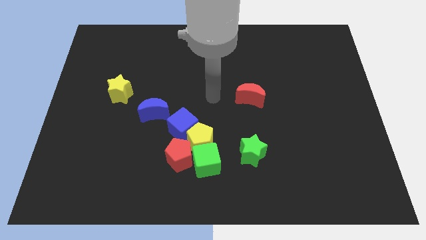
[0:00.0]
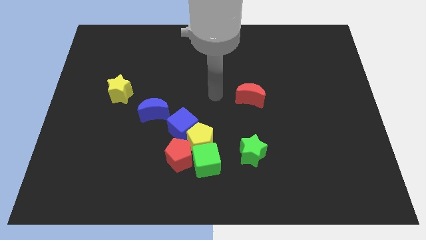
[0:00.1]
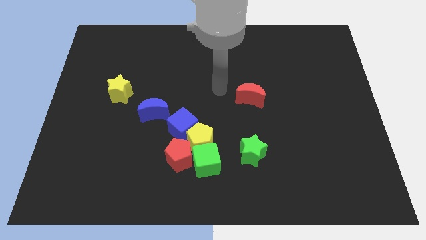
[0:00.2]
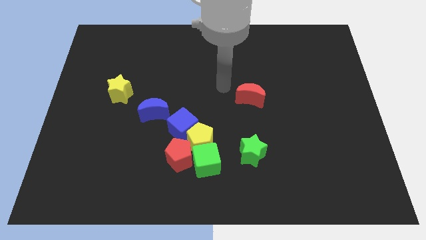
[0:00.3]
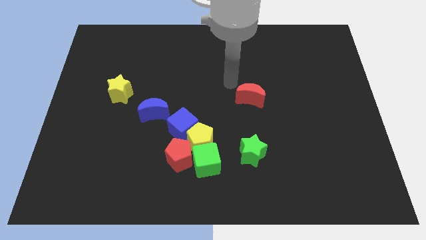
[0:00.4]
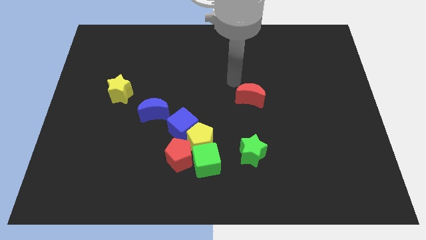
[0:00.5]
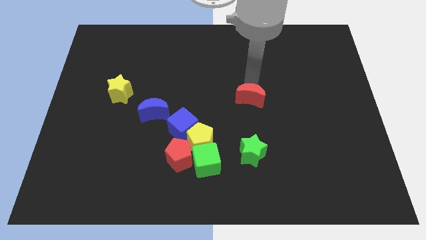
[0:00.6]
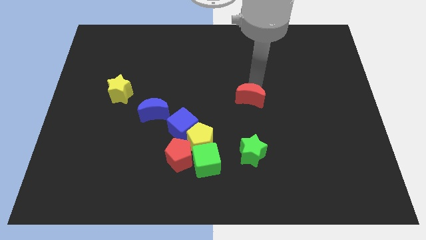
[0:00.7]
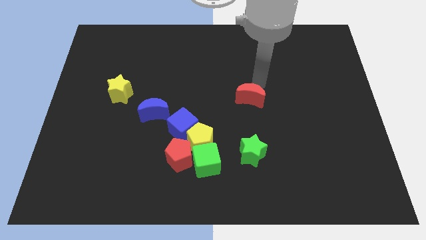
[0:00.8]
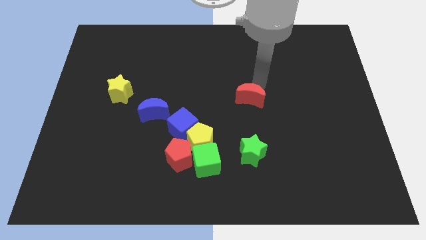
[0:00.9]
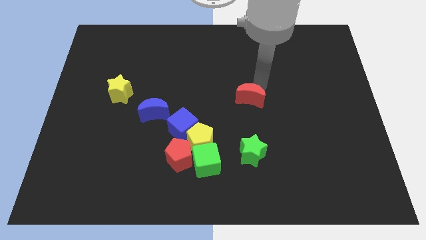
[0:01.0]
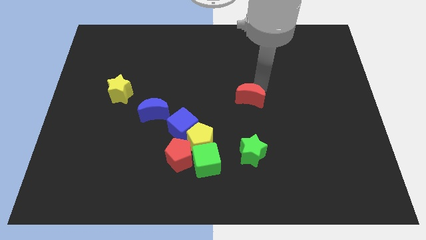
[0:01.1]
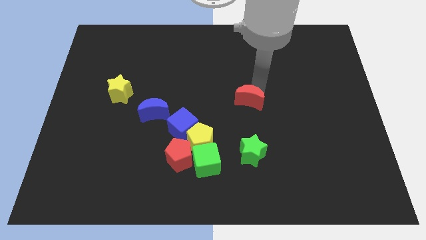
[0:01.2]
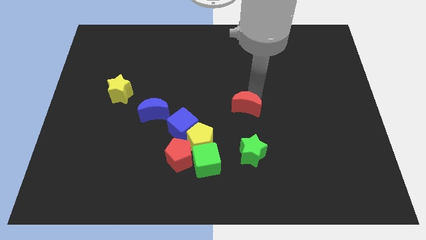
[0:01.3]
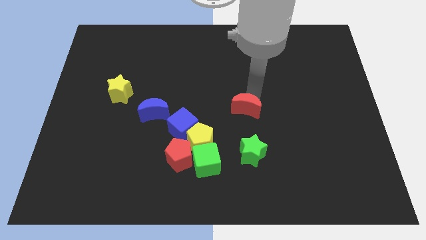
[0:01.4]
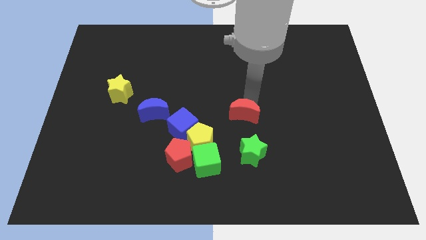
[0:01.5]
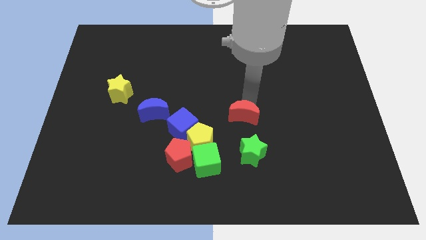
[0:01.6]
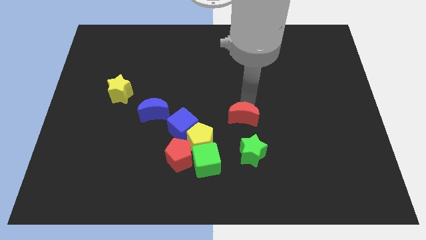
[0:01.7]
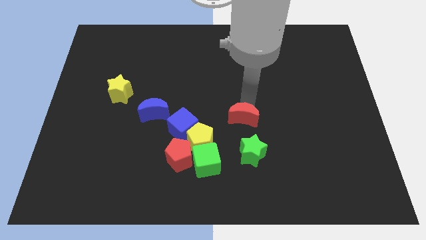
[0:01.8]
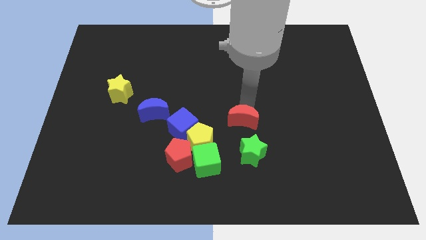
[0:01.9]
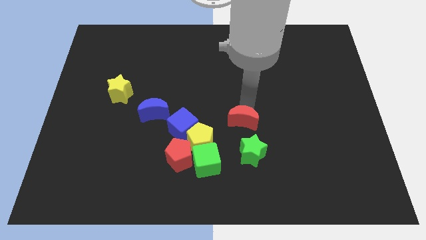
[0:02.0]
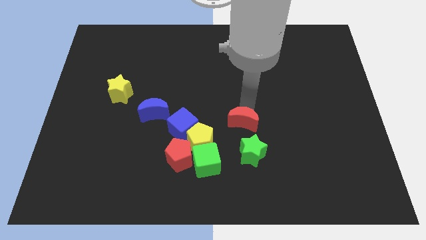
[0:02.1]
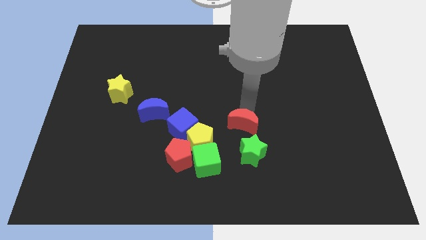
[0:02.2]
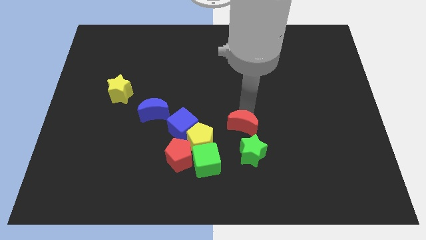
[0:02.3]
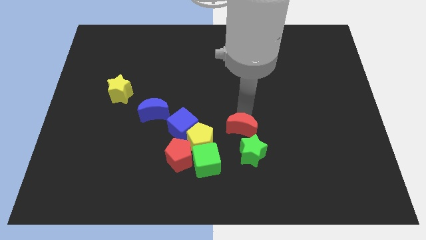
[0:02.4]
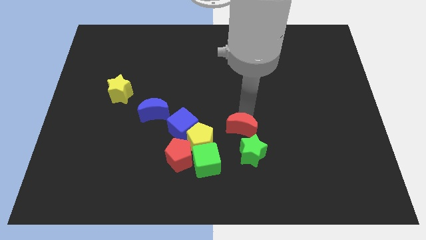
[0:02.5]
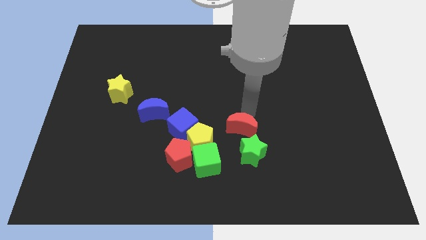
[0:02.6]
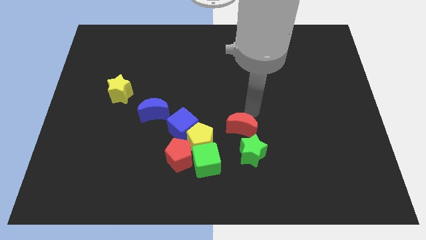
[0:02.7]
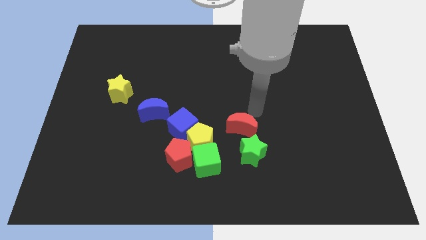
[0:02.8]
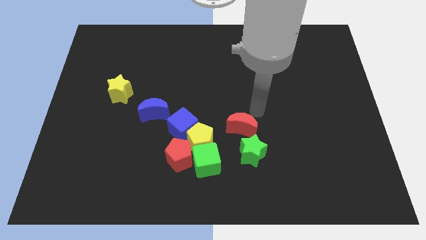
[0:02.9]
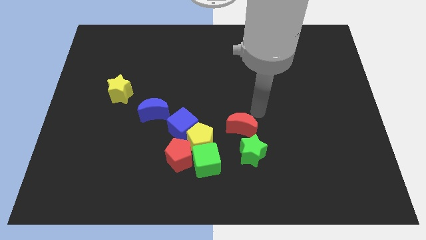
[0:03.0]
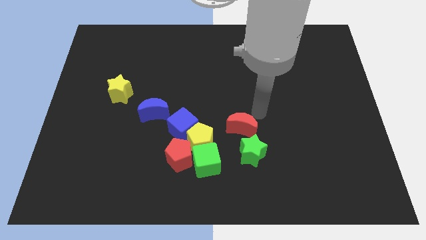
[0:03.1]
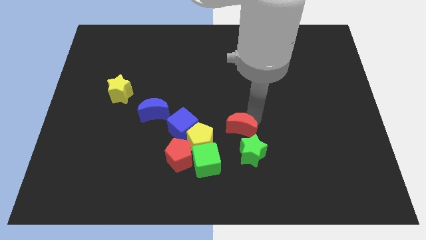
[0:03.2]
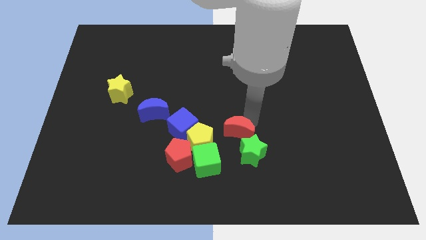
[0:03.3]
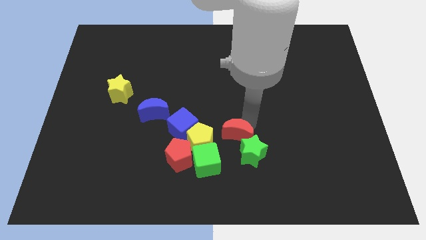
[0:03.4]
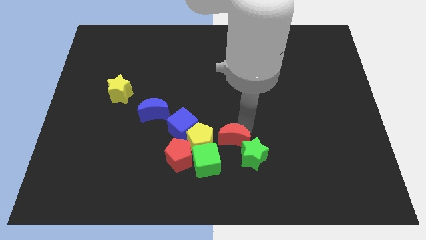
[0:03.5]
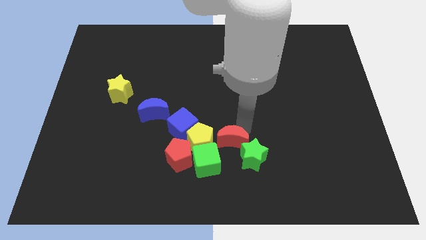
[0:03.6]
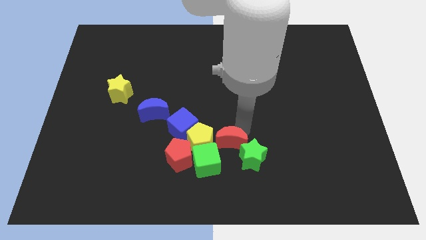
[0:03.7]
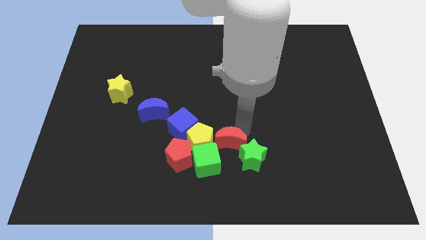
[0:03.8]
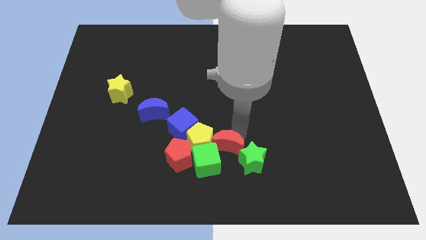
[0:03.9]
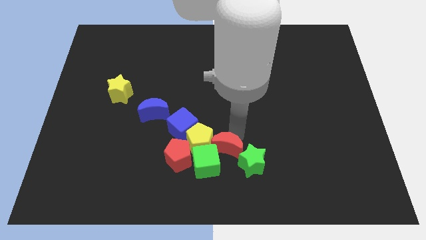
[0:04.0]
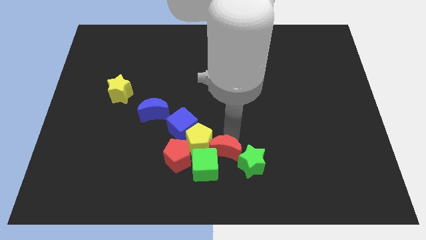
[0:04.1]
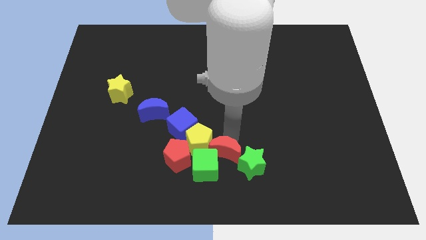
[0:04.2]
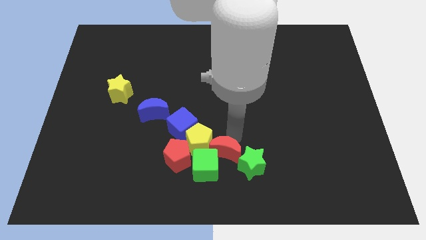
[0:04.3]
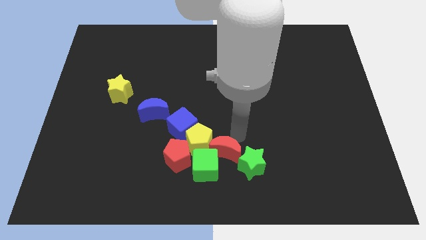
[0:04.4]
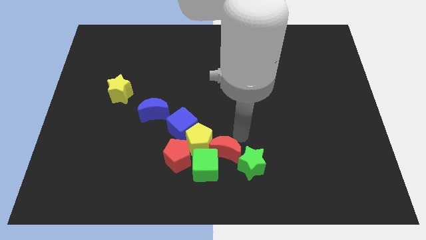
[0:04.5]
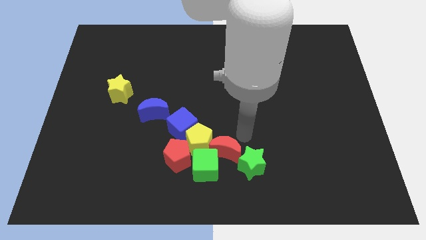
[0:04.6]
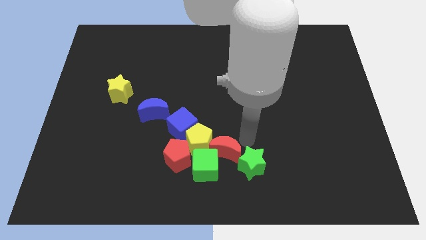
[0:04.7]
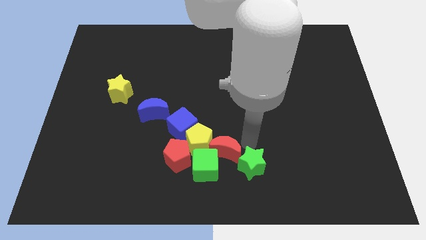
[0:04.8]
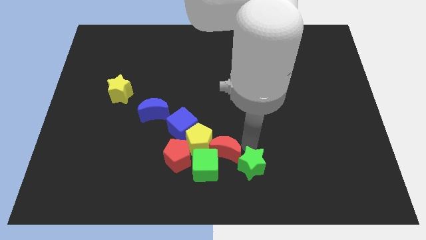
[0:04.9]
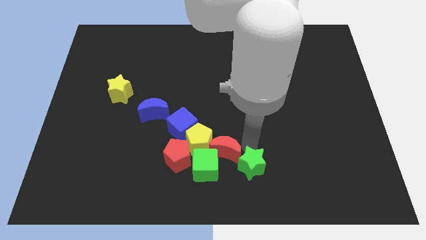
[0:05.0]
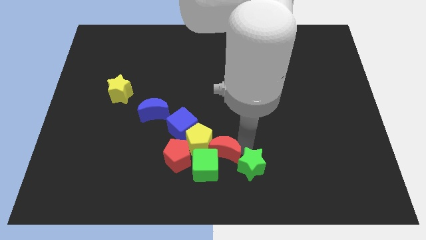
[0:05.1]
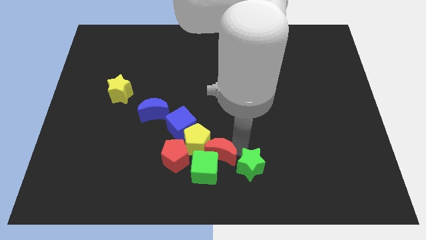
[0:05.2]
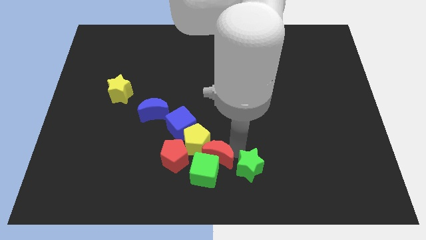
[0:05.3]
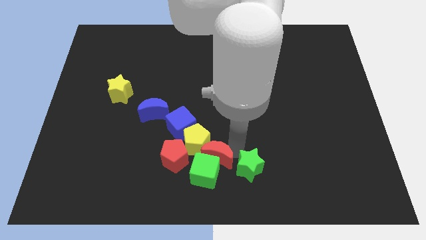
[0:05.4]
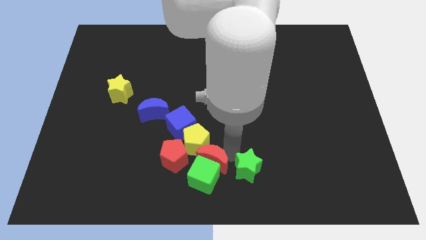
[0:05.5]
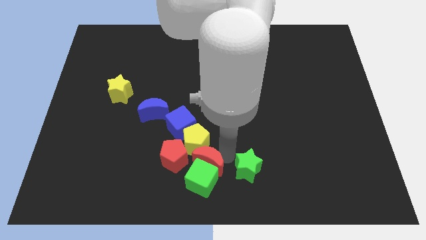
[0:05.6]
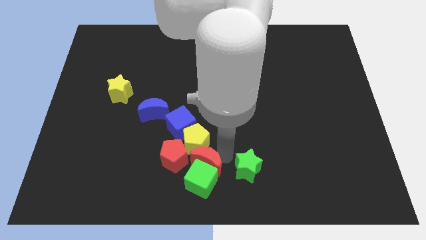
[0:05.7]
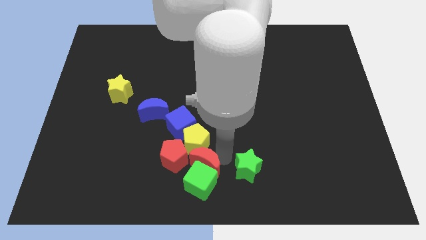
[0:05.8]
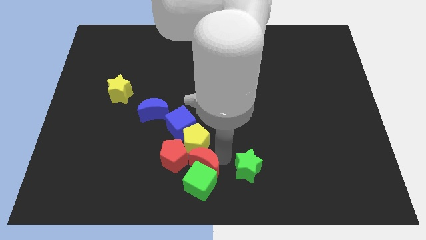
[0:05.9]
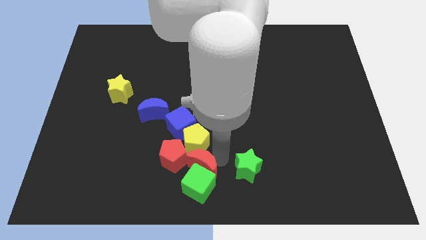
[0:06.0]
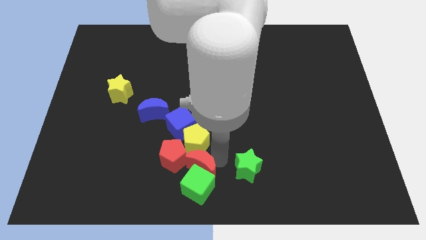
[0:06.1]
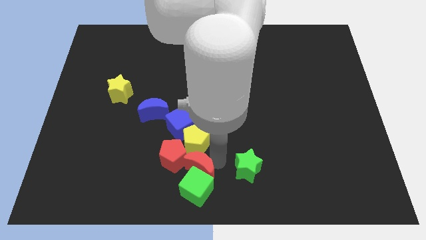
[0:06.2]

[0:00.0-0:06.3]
put the red moon next to the red pentagon

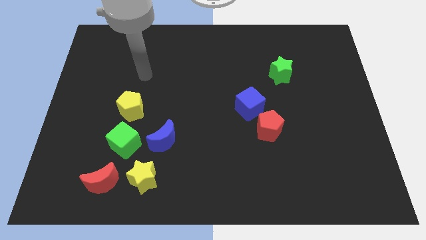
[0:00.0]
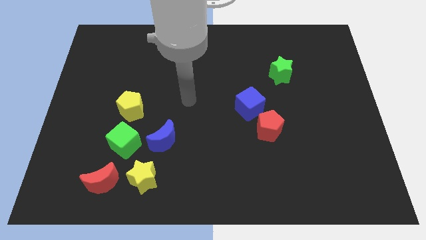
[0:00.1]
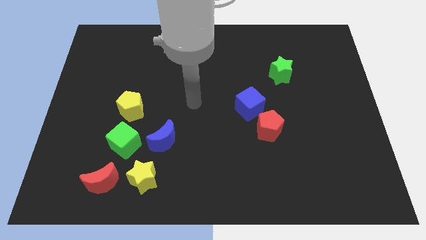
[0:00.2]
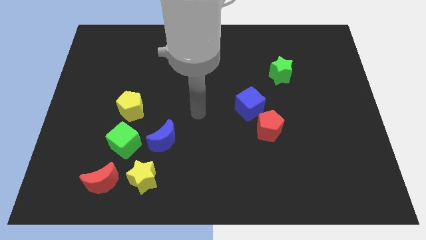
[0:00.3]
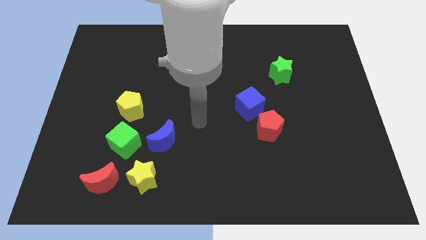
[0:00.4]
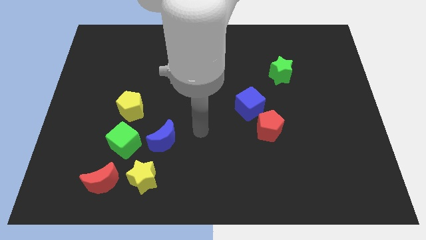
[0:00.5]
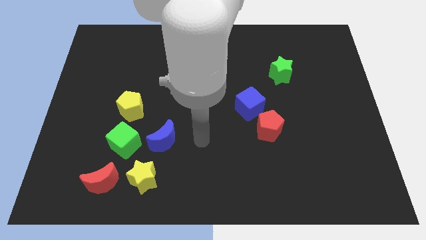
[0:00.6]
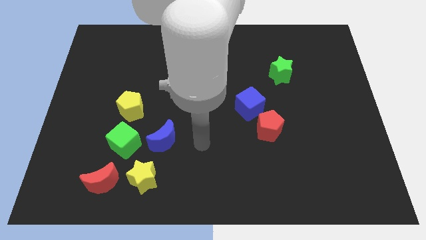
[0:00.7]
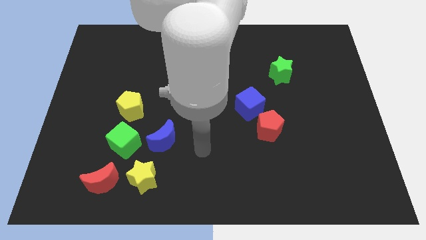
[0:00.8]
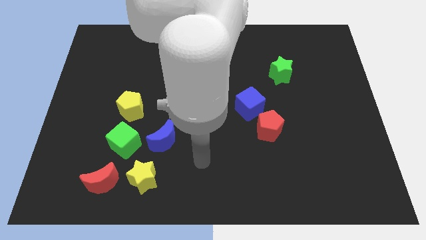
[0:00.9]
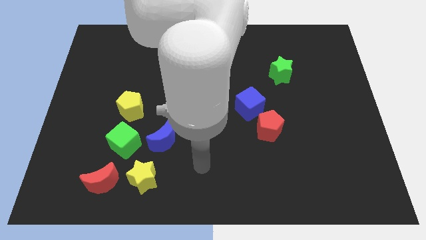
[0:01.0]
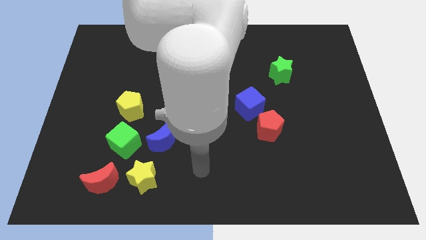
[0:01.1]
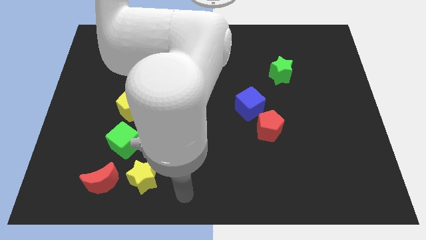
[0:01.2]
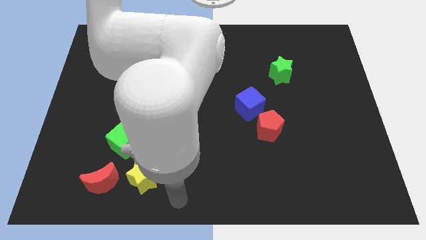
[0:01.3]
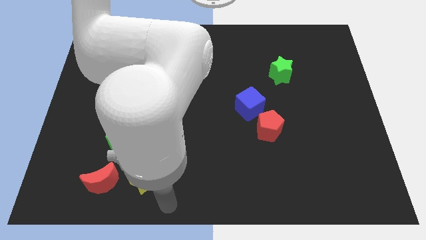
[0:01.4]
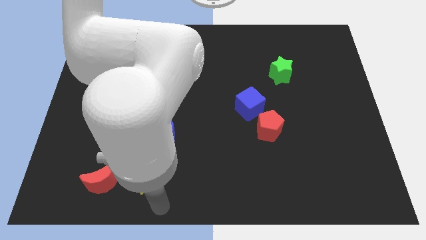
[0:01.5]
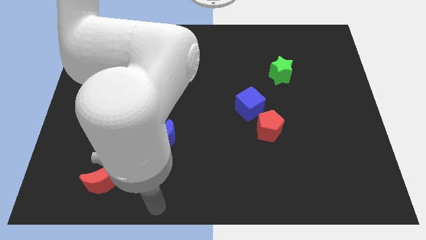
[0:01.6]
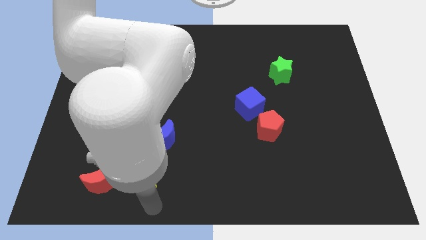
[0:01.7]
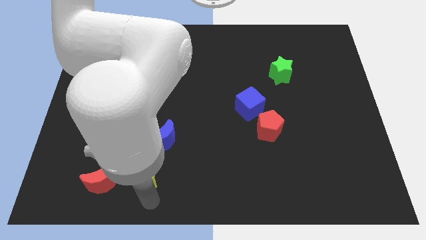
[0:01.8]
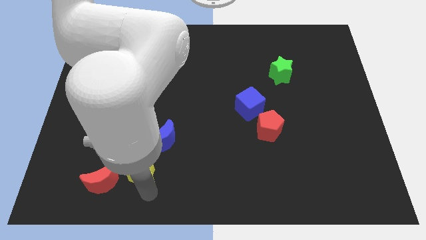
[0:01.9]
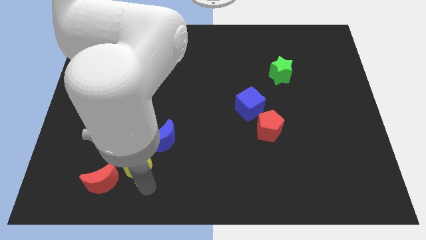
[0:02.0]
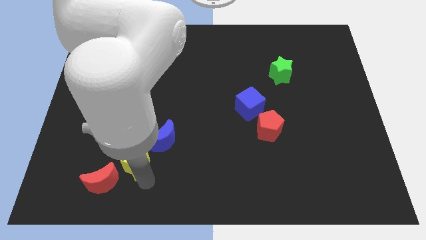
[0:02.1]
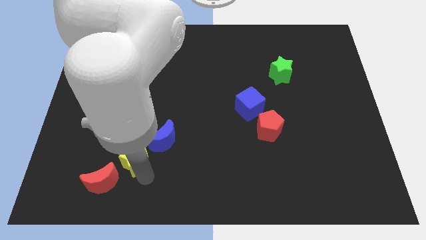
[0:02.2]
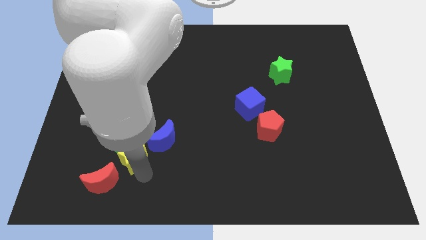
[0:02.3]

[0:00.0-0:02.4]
slide the yellow star towards the green cube
